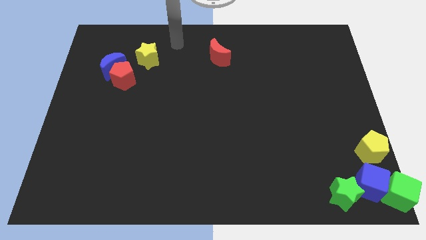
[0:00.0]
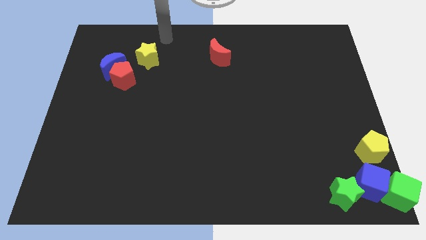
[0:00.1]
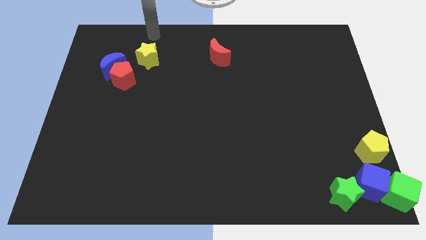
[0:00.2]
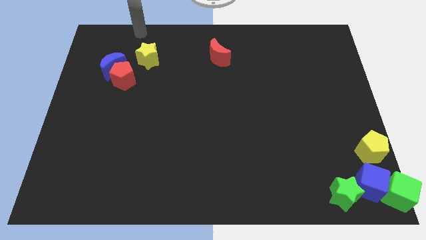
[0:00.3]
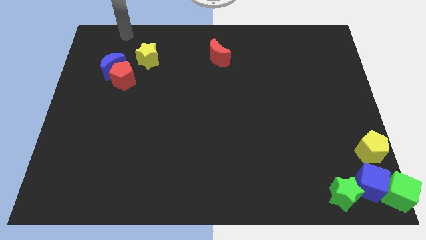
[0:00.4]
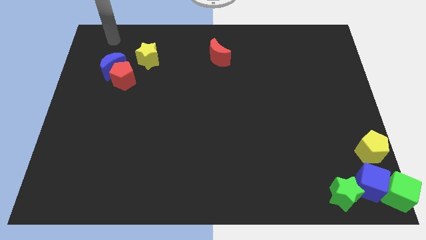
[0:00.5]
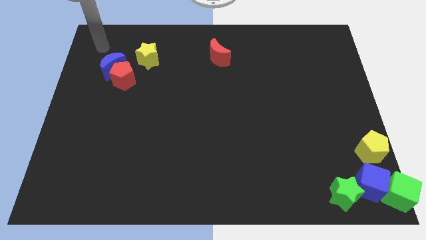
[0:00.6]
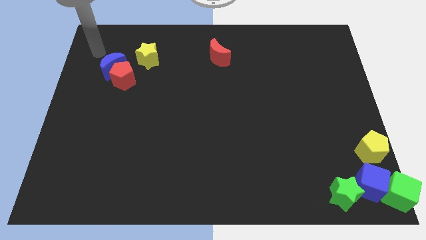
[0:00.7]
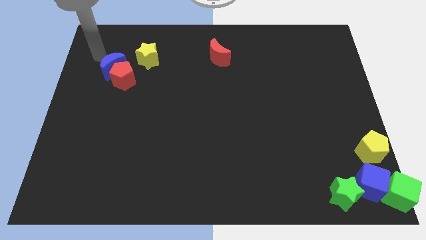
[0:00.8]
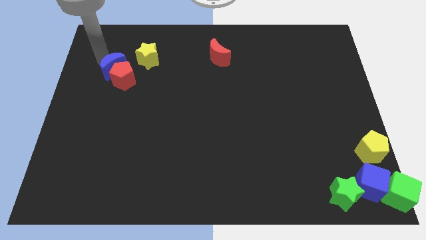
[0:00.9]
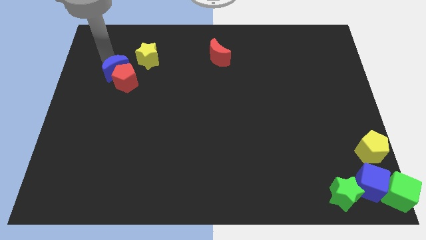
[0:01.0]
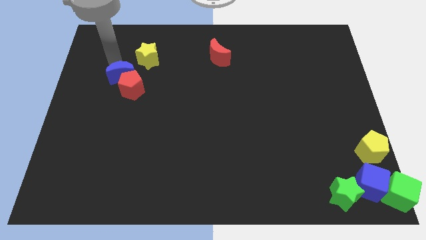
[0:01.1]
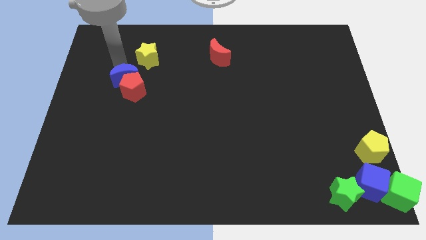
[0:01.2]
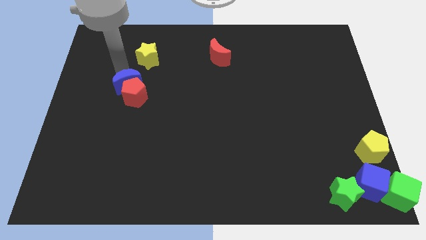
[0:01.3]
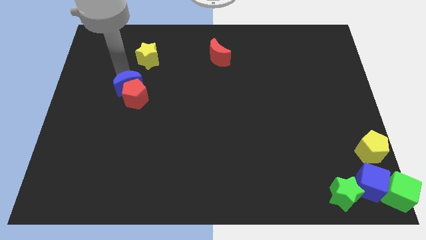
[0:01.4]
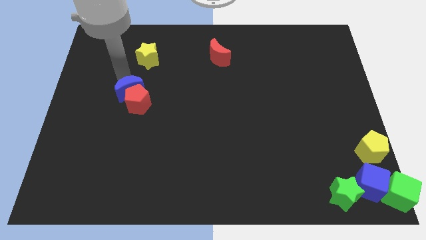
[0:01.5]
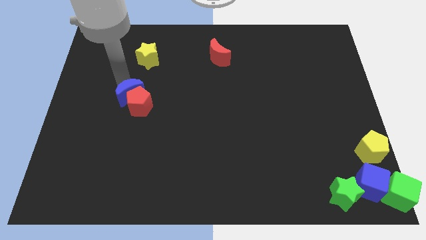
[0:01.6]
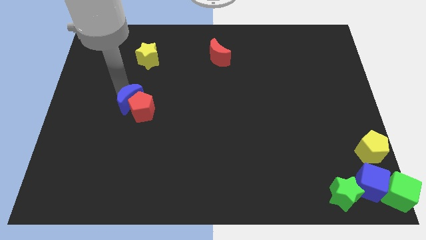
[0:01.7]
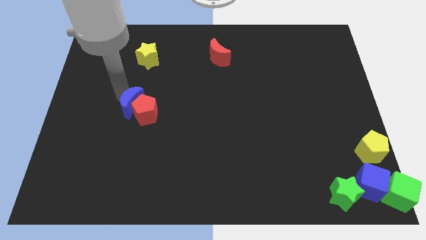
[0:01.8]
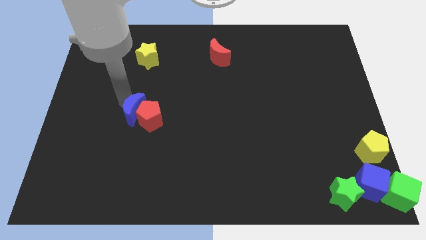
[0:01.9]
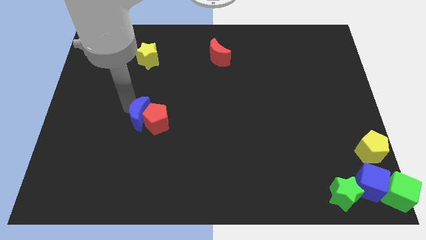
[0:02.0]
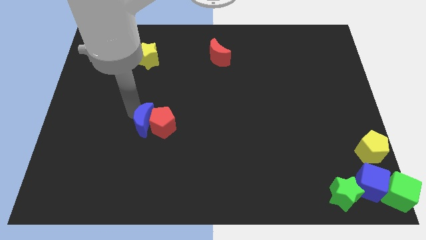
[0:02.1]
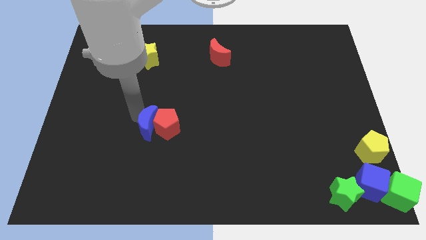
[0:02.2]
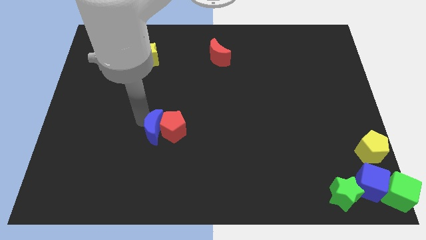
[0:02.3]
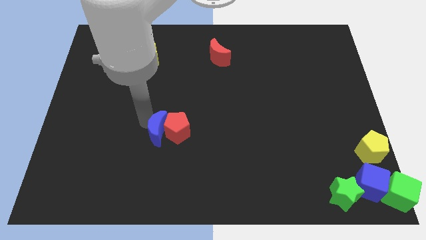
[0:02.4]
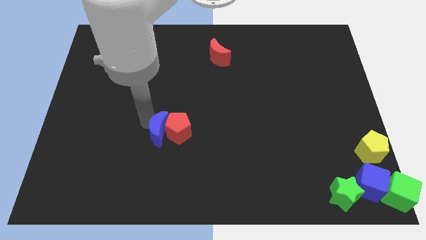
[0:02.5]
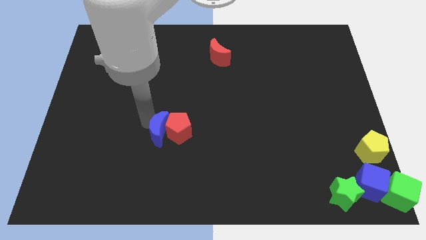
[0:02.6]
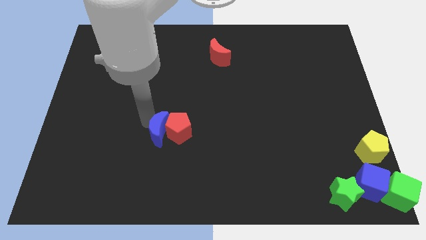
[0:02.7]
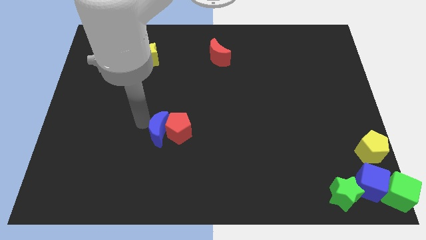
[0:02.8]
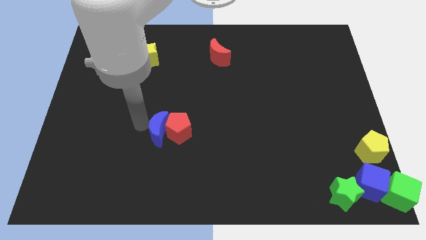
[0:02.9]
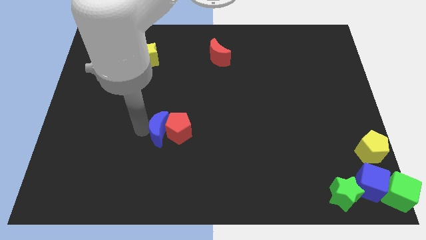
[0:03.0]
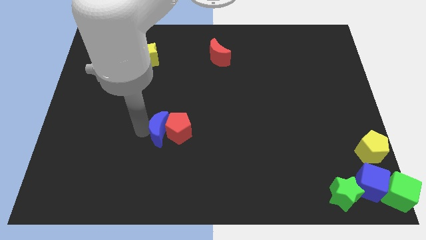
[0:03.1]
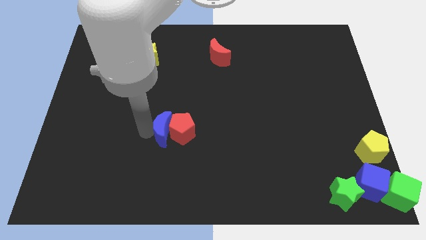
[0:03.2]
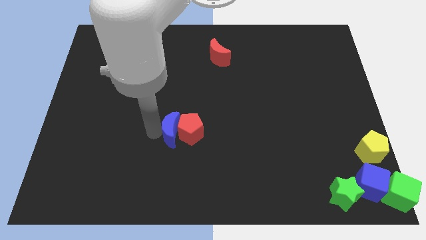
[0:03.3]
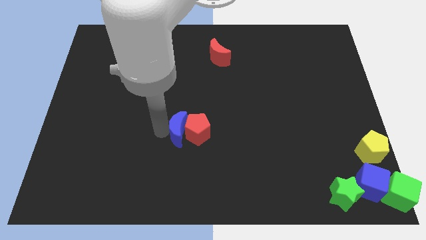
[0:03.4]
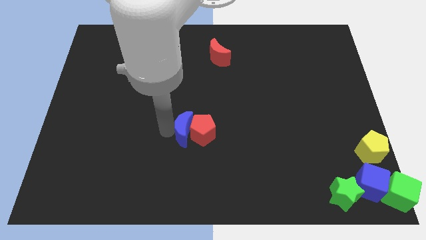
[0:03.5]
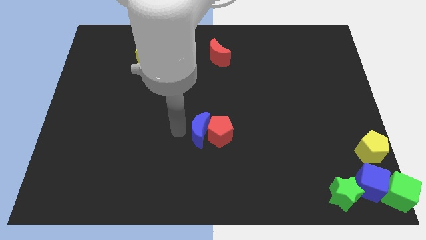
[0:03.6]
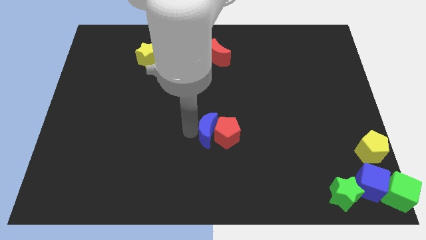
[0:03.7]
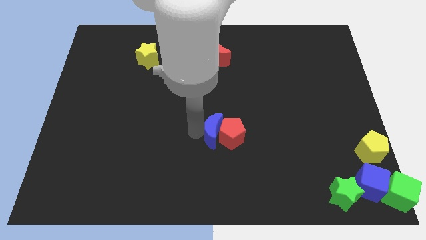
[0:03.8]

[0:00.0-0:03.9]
push blue crescent below red crescent

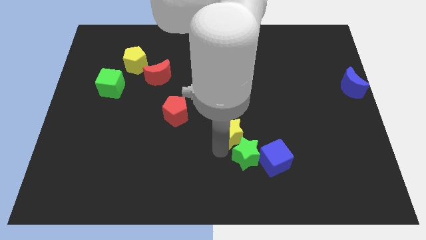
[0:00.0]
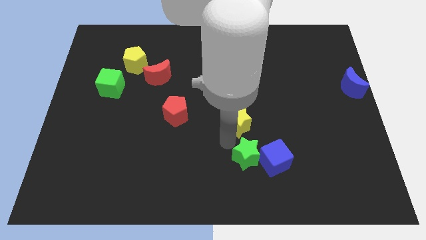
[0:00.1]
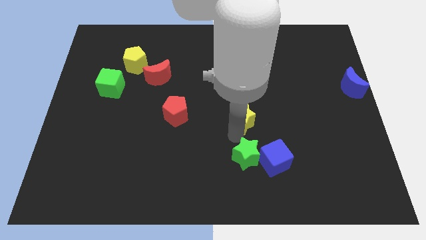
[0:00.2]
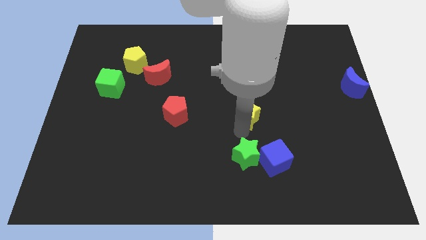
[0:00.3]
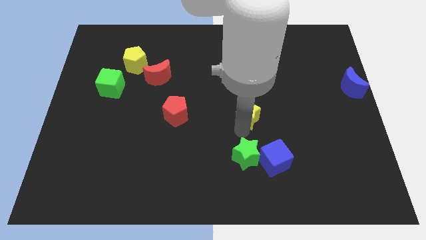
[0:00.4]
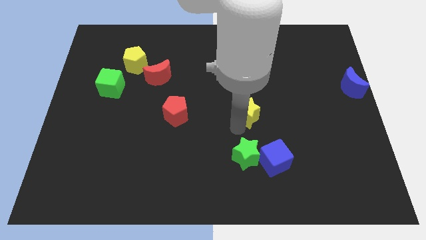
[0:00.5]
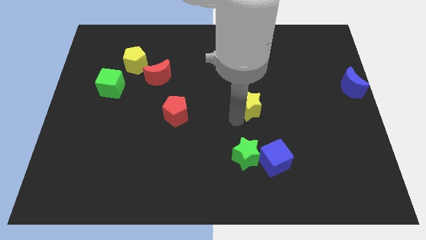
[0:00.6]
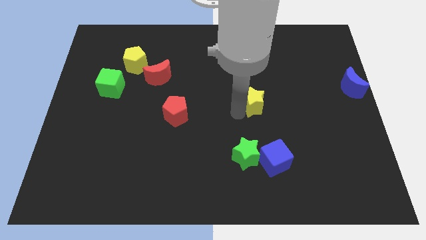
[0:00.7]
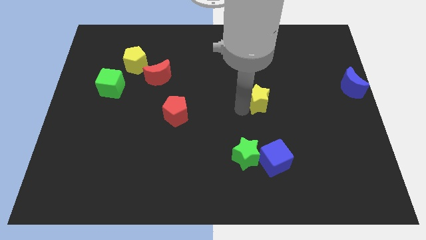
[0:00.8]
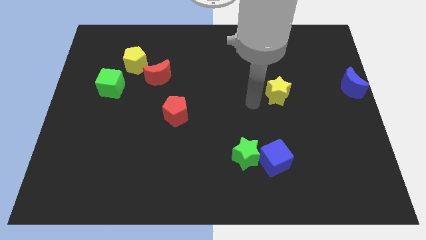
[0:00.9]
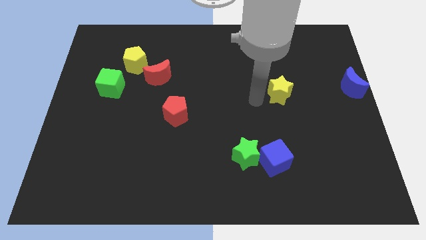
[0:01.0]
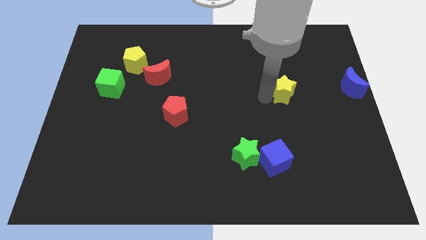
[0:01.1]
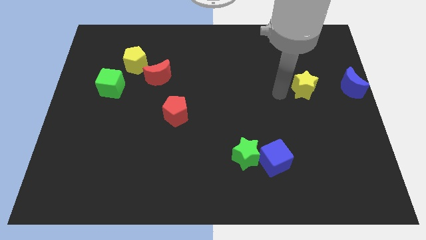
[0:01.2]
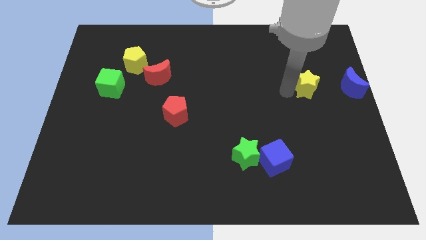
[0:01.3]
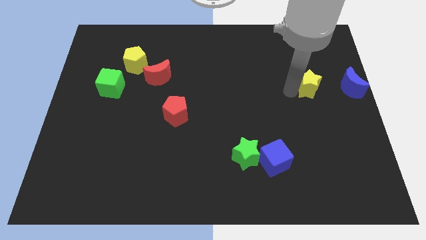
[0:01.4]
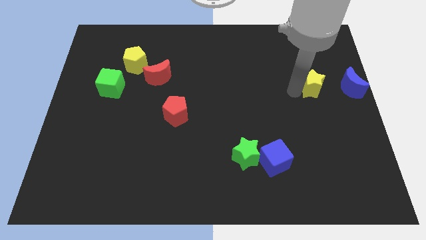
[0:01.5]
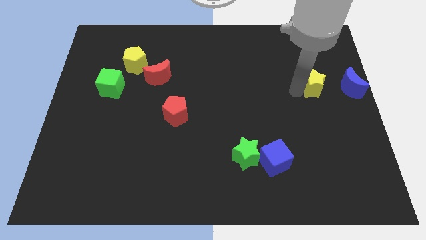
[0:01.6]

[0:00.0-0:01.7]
push the yellow star to the left of the blue crescent

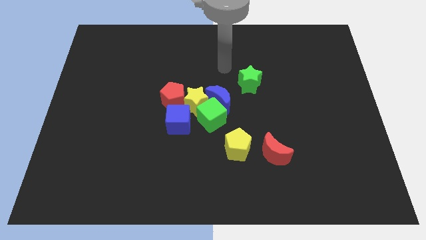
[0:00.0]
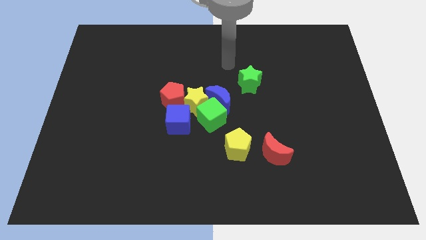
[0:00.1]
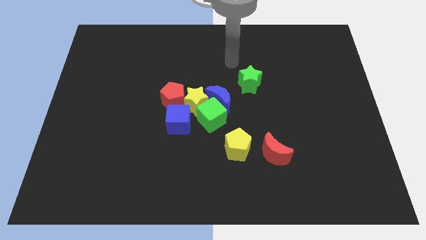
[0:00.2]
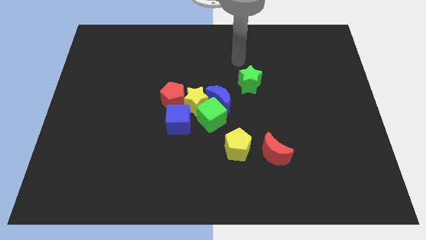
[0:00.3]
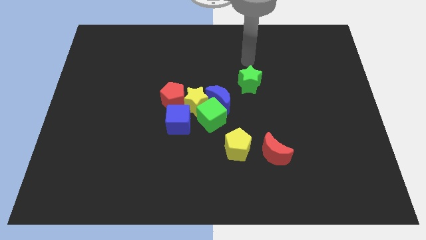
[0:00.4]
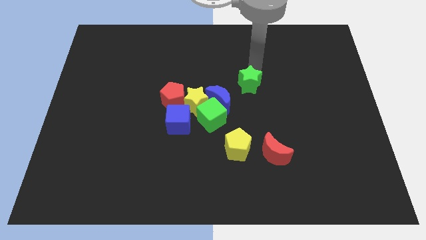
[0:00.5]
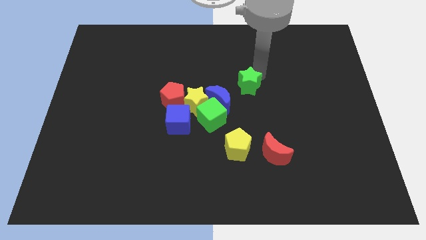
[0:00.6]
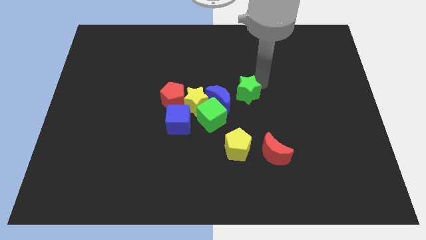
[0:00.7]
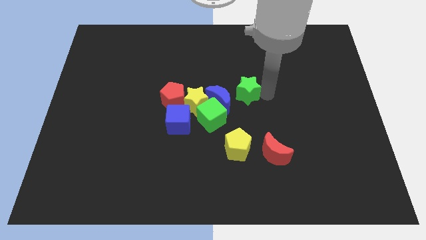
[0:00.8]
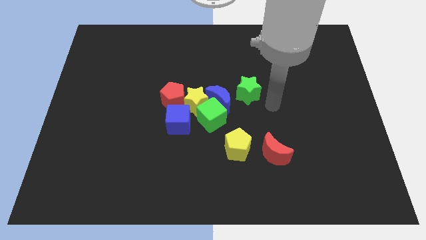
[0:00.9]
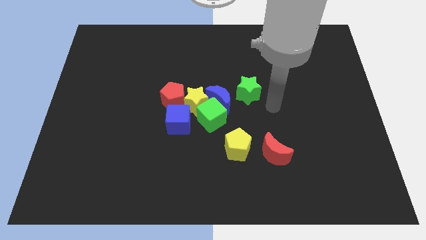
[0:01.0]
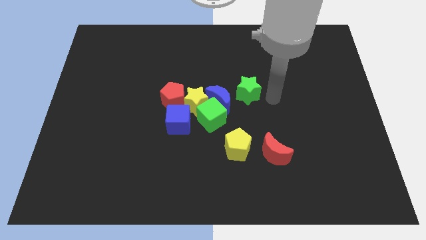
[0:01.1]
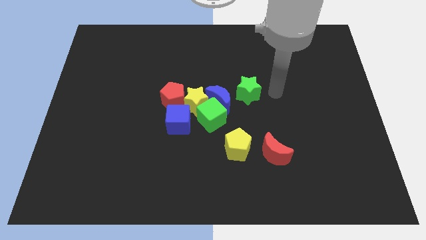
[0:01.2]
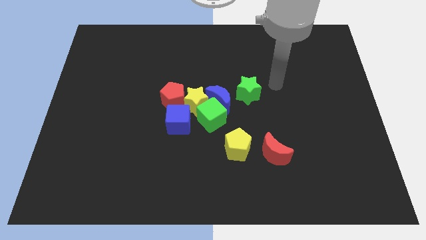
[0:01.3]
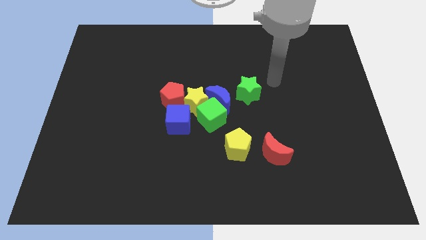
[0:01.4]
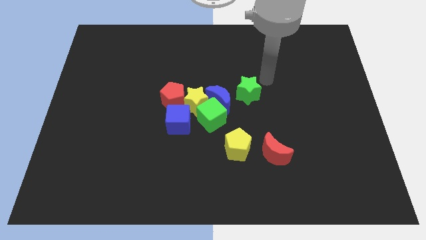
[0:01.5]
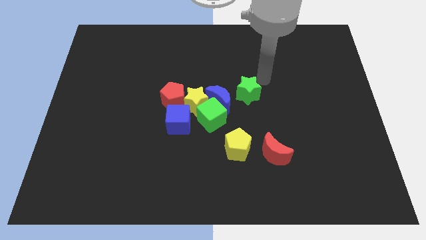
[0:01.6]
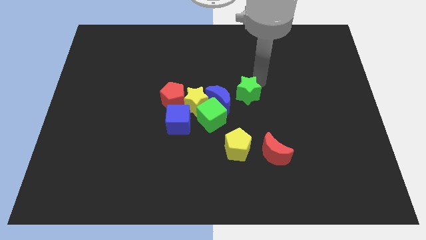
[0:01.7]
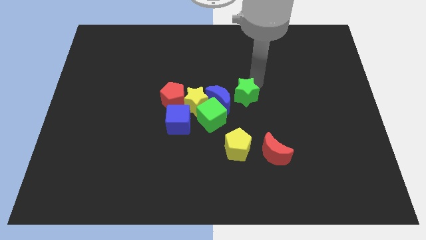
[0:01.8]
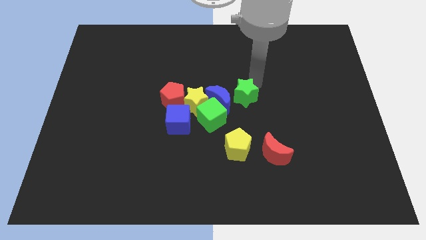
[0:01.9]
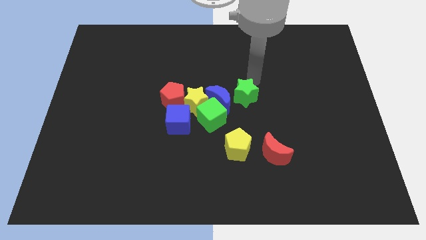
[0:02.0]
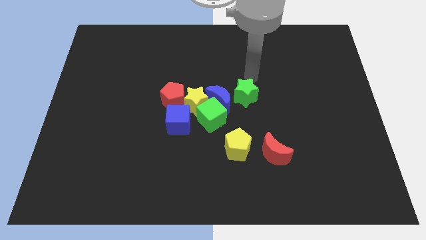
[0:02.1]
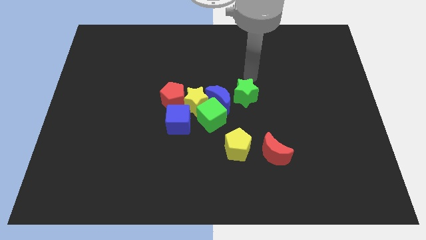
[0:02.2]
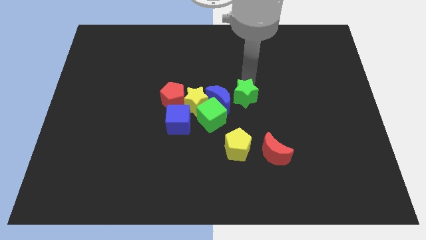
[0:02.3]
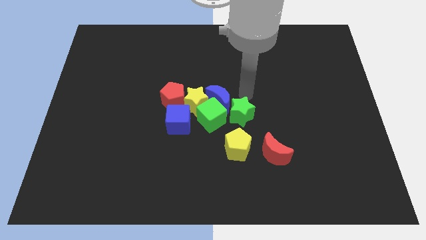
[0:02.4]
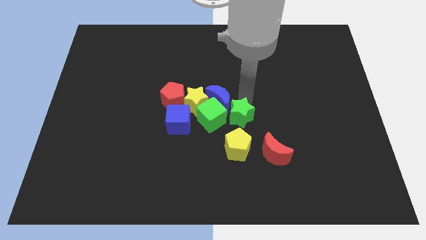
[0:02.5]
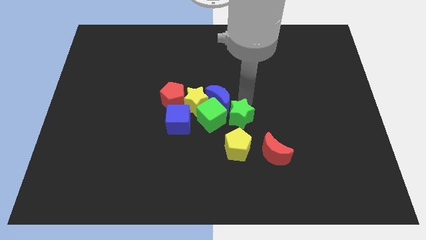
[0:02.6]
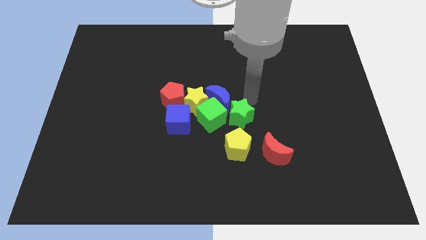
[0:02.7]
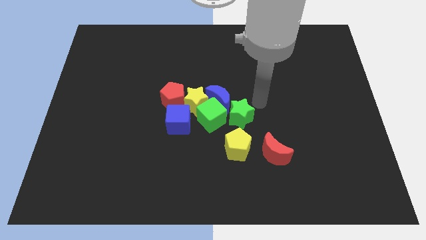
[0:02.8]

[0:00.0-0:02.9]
place the green star above the yellow pentagon

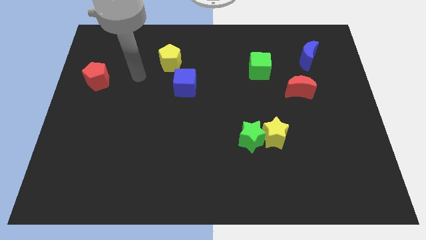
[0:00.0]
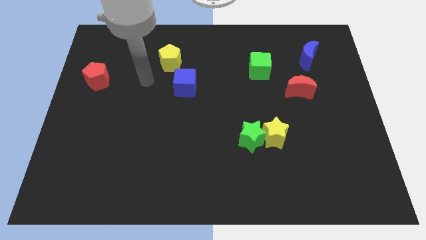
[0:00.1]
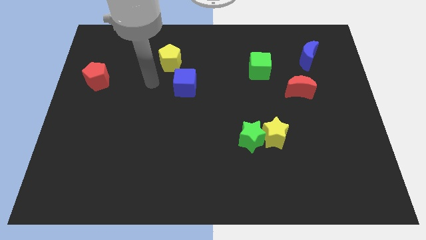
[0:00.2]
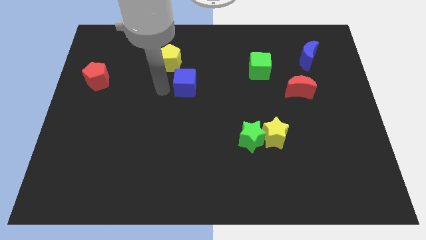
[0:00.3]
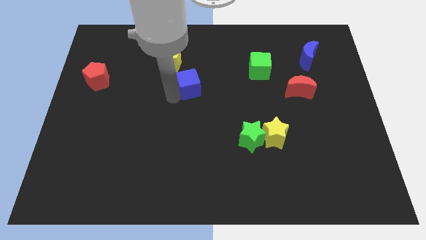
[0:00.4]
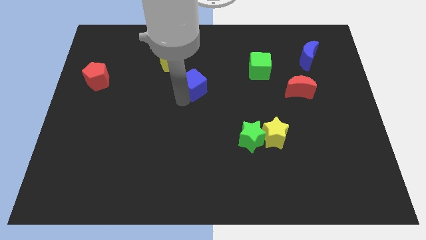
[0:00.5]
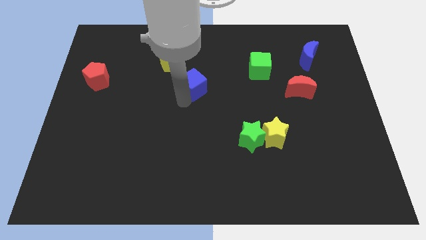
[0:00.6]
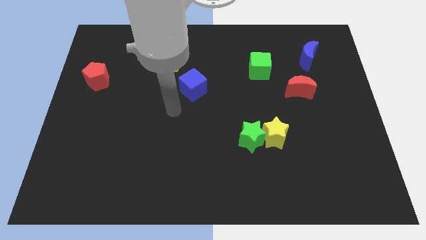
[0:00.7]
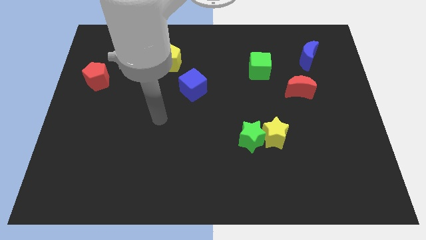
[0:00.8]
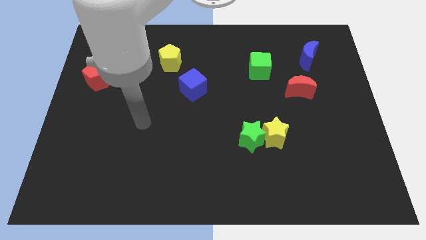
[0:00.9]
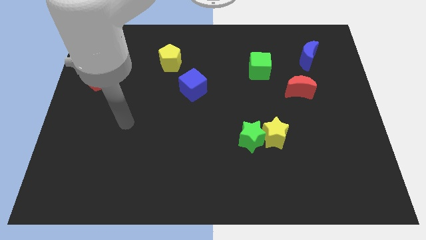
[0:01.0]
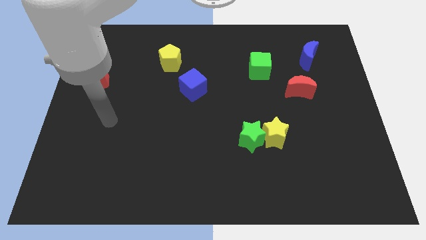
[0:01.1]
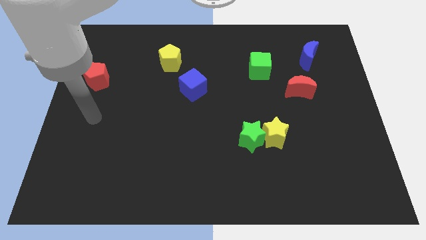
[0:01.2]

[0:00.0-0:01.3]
move the blue cube slightly to the right
